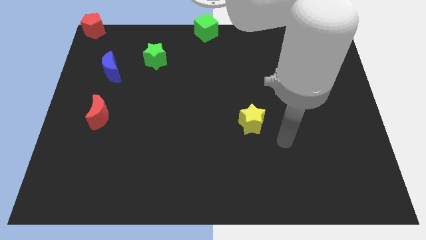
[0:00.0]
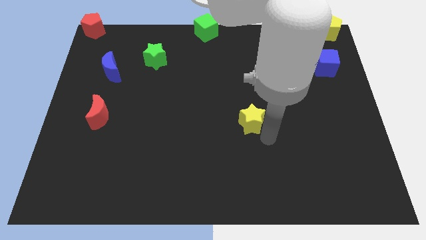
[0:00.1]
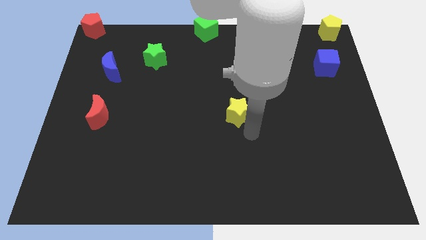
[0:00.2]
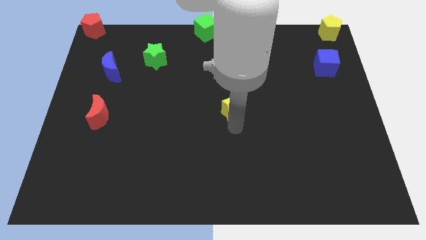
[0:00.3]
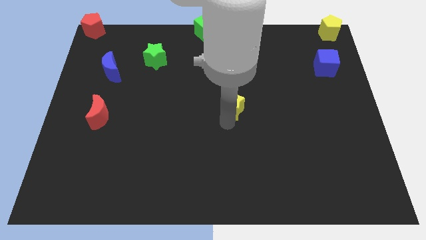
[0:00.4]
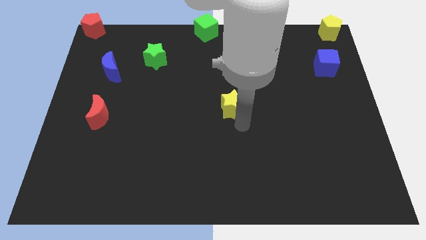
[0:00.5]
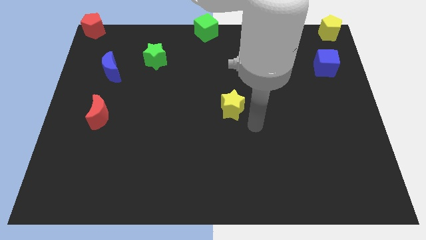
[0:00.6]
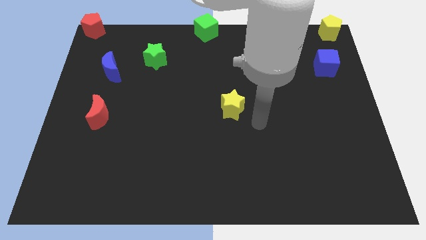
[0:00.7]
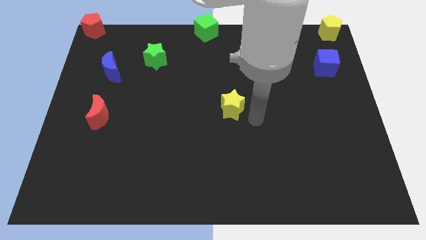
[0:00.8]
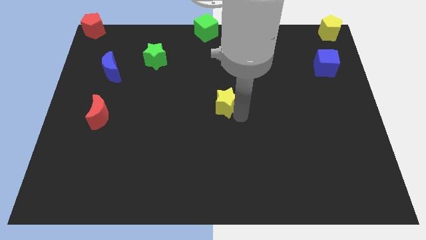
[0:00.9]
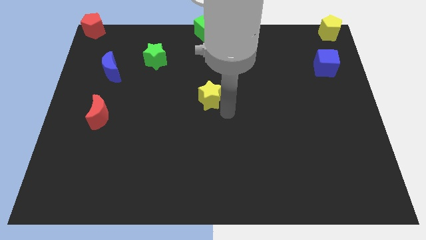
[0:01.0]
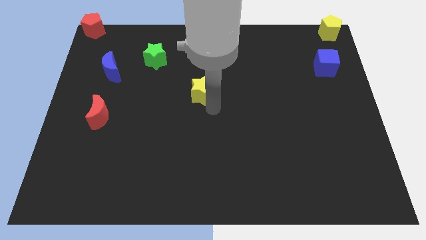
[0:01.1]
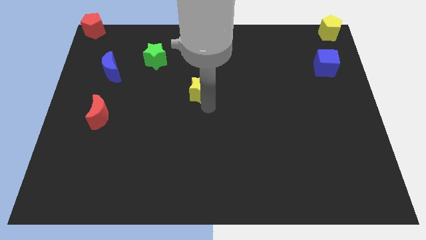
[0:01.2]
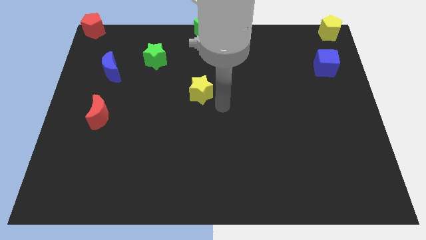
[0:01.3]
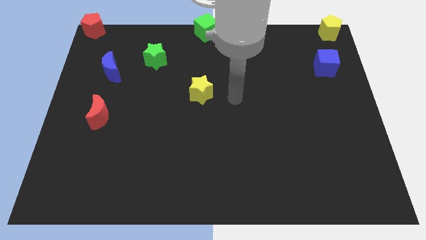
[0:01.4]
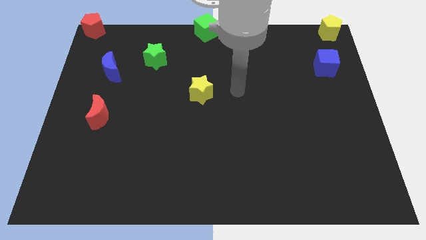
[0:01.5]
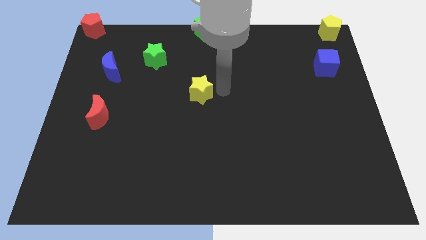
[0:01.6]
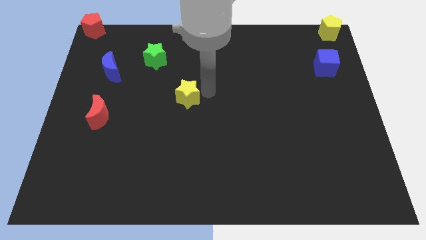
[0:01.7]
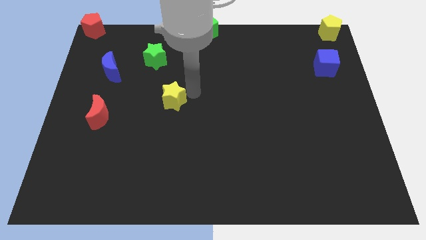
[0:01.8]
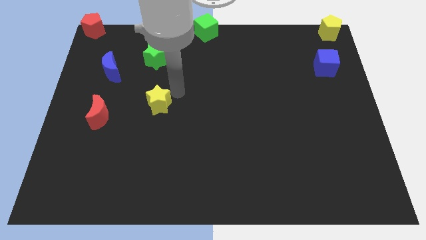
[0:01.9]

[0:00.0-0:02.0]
place the yellow star below the green star

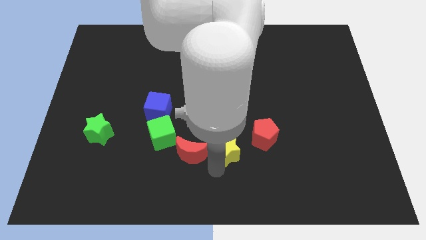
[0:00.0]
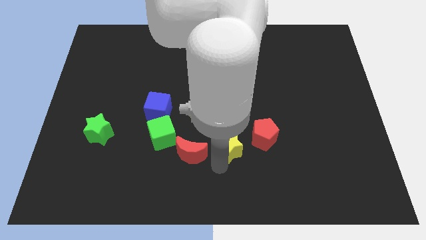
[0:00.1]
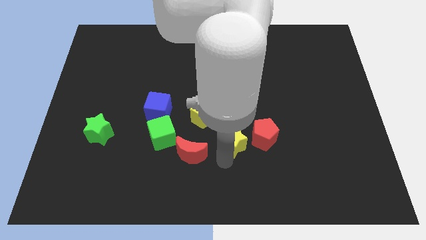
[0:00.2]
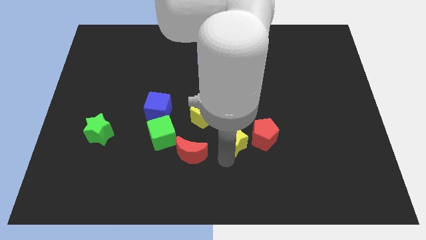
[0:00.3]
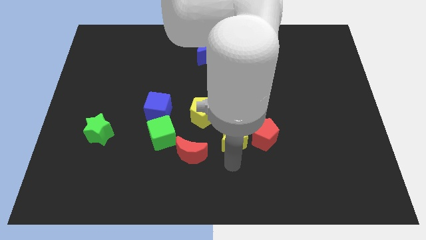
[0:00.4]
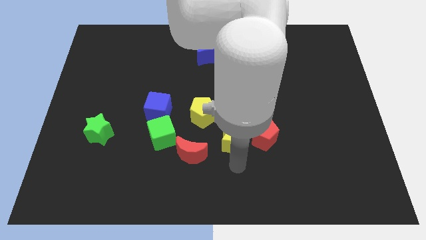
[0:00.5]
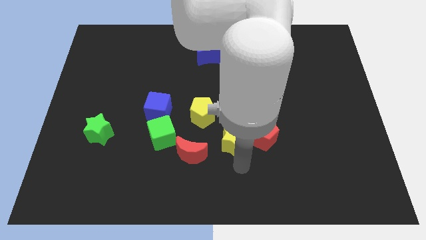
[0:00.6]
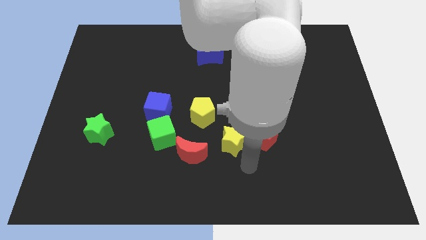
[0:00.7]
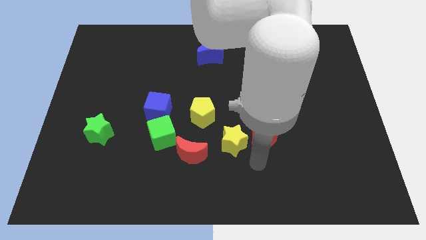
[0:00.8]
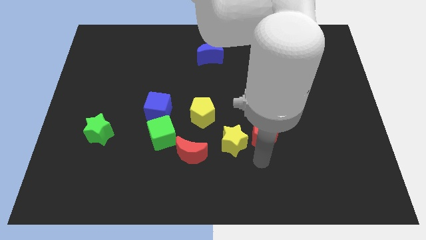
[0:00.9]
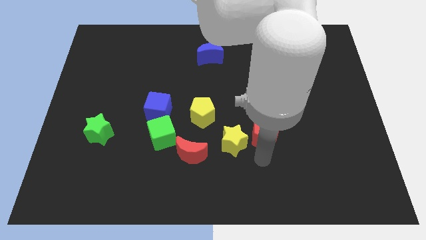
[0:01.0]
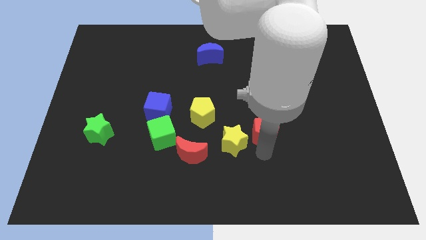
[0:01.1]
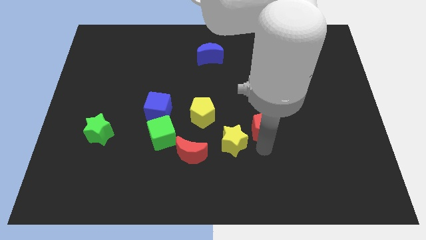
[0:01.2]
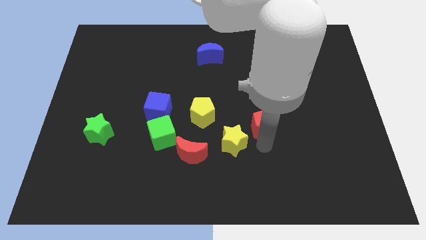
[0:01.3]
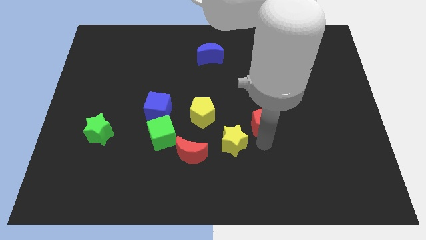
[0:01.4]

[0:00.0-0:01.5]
push the yellow star and red pentagon diagonally to the top right side of the red crescent

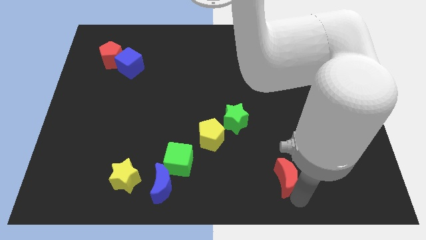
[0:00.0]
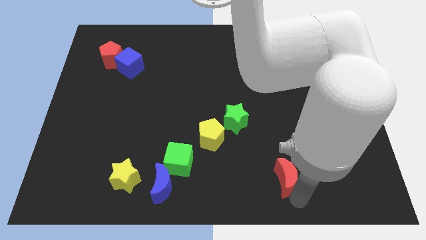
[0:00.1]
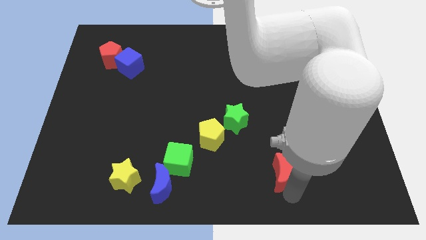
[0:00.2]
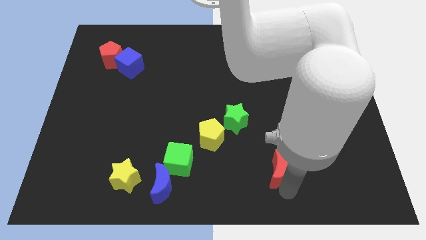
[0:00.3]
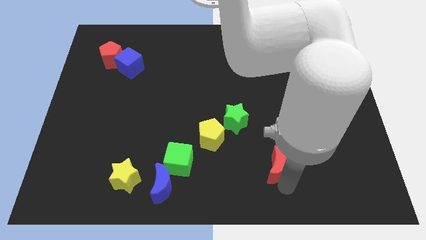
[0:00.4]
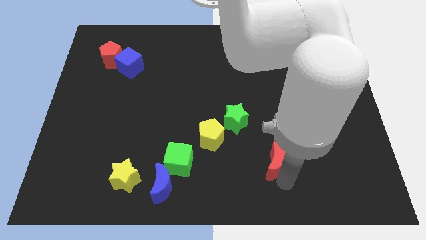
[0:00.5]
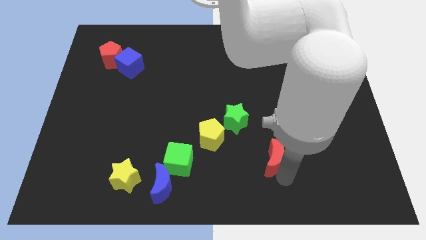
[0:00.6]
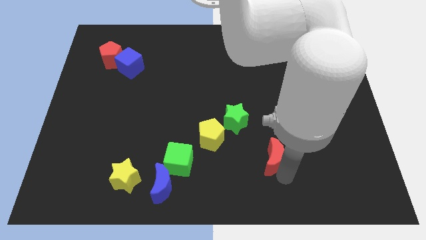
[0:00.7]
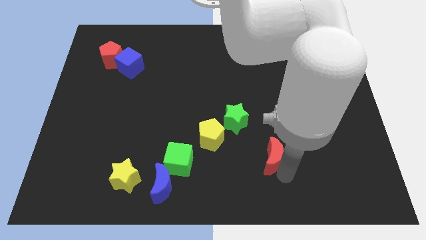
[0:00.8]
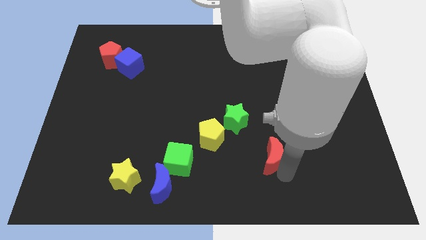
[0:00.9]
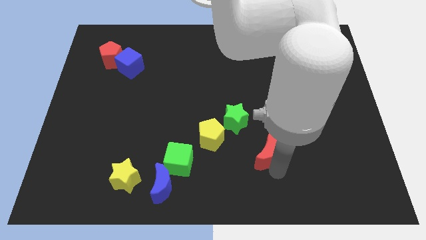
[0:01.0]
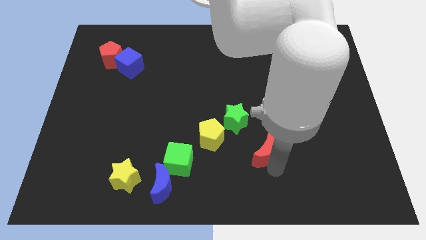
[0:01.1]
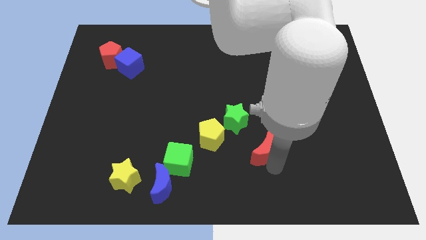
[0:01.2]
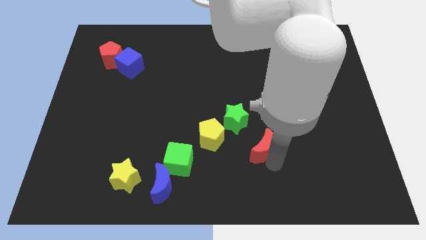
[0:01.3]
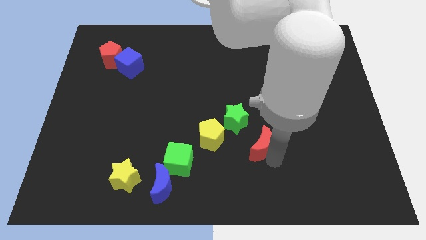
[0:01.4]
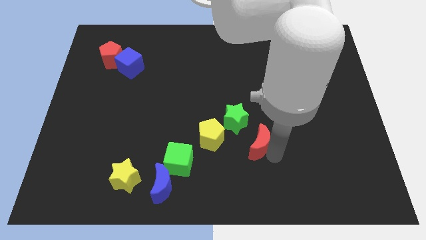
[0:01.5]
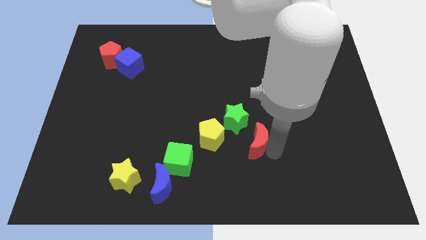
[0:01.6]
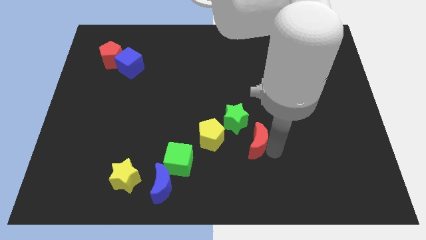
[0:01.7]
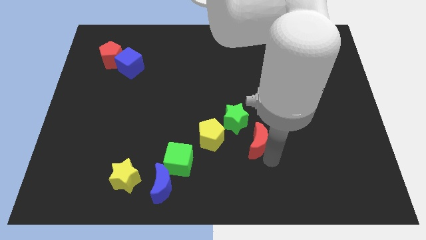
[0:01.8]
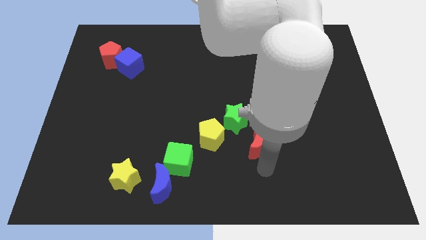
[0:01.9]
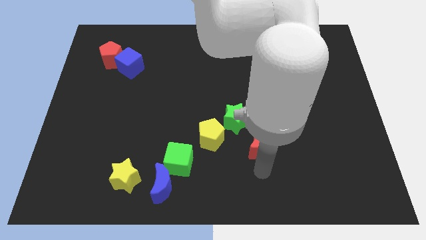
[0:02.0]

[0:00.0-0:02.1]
push the red moon towards the green star

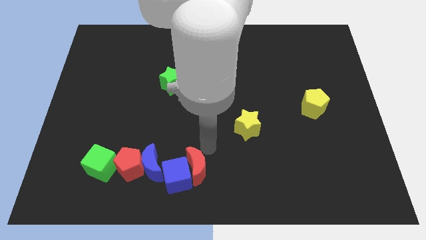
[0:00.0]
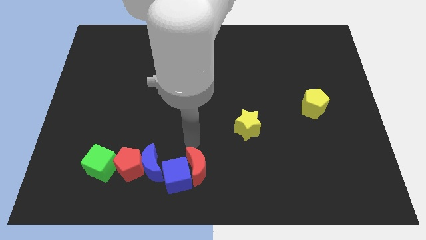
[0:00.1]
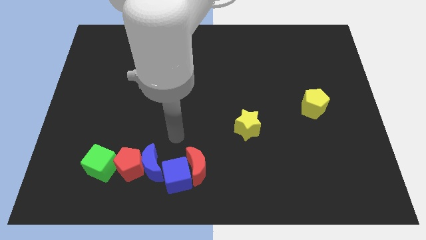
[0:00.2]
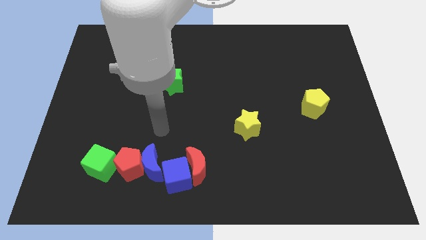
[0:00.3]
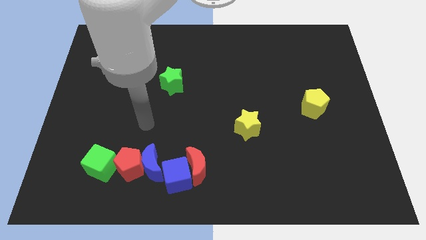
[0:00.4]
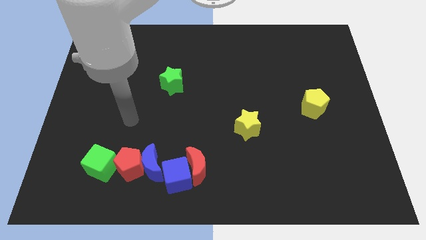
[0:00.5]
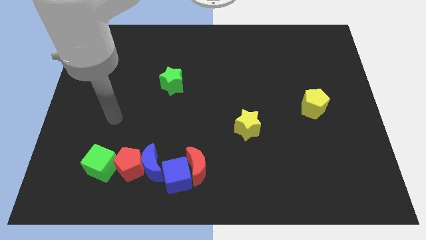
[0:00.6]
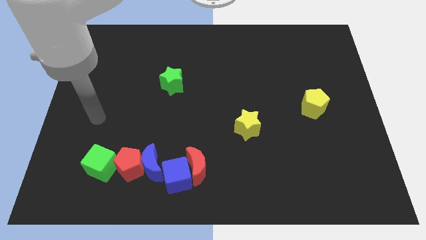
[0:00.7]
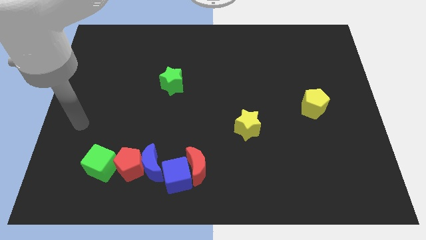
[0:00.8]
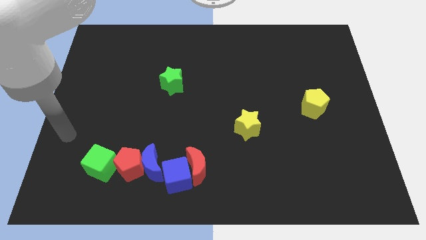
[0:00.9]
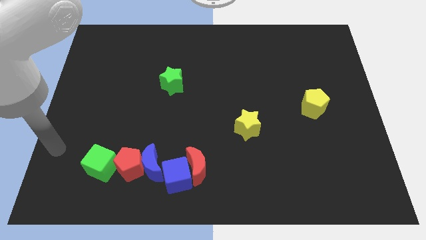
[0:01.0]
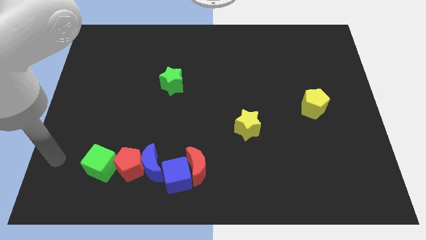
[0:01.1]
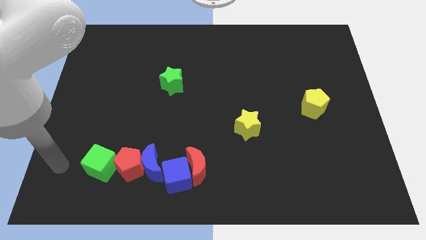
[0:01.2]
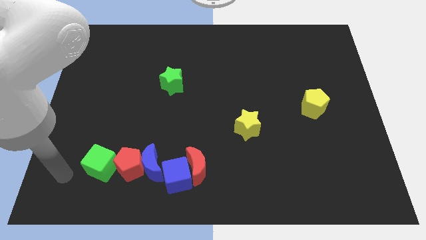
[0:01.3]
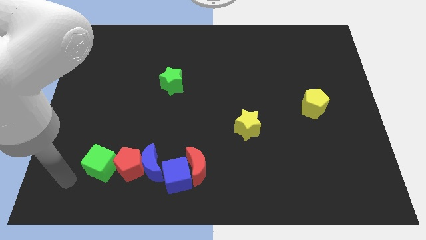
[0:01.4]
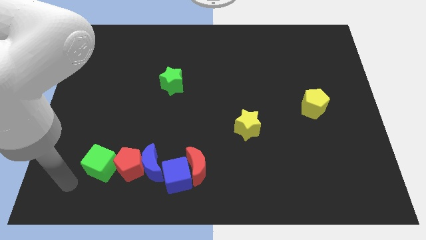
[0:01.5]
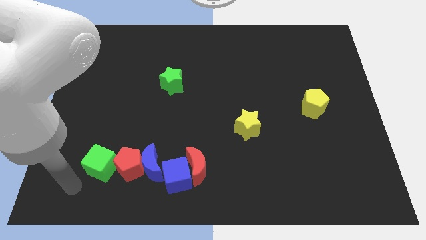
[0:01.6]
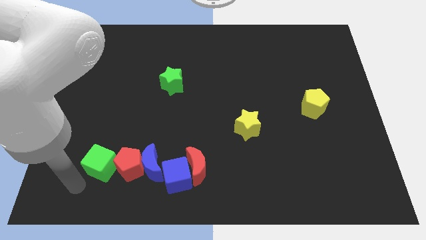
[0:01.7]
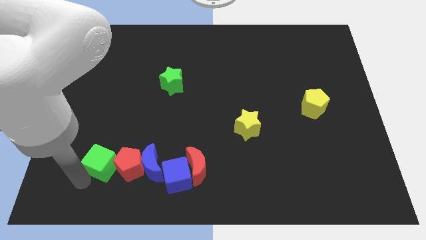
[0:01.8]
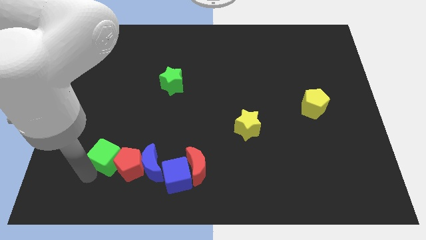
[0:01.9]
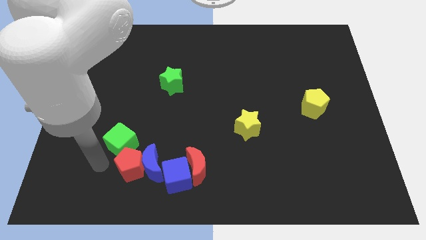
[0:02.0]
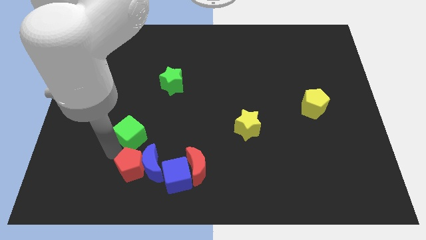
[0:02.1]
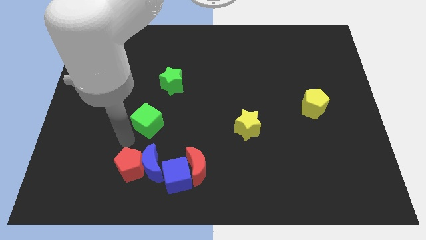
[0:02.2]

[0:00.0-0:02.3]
push the green cube to the top of the blue crescent

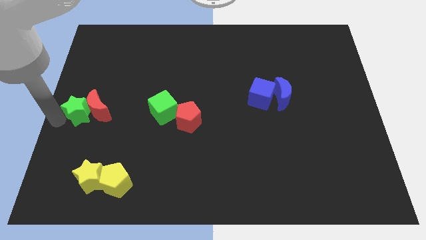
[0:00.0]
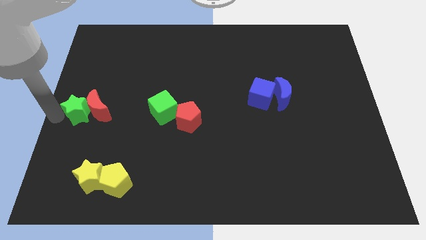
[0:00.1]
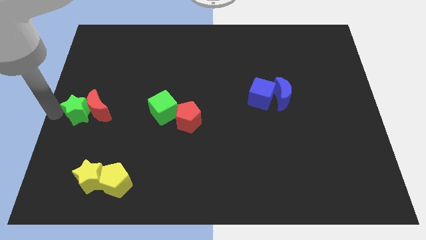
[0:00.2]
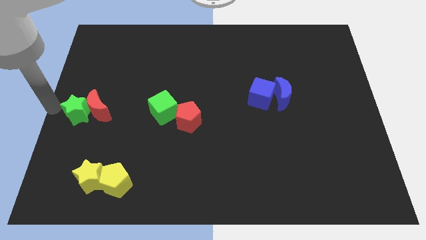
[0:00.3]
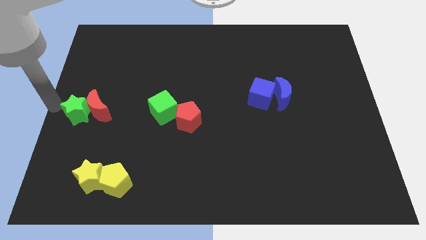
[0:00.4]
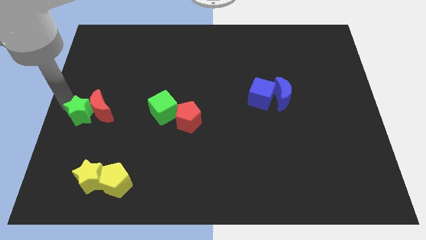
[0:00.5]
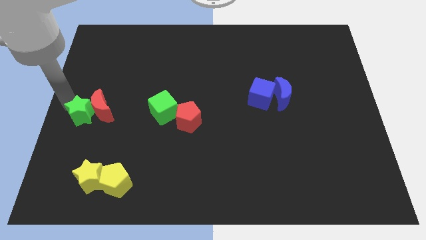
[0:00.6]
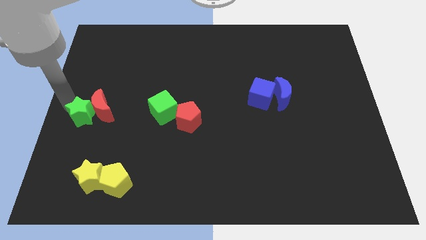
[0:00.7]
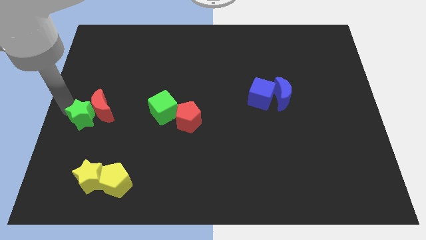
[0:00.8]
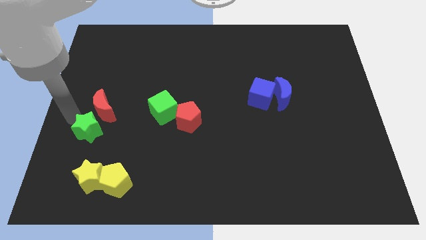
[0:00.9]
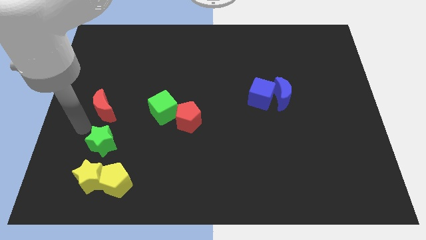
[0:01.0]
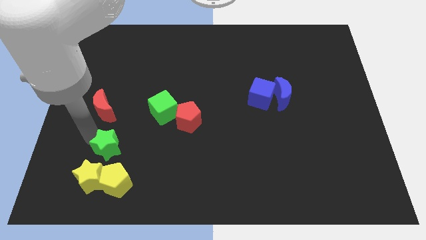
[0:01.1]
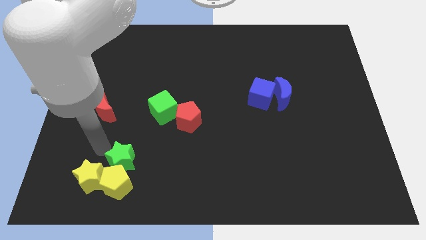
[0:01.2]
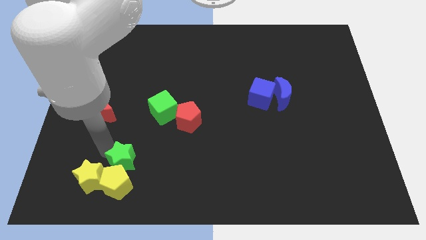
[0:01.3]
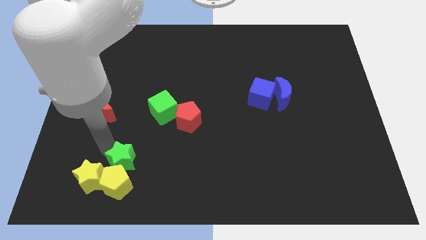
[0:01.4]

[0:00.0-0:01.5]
move the green star into the yellow pentagon
